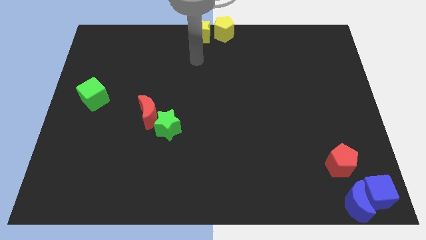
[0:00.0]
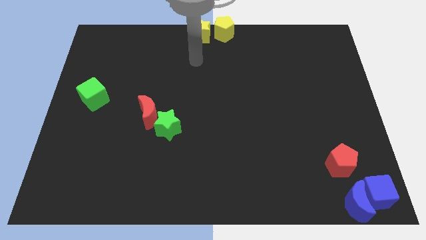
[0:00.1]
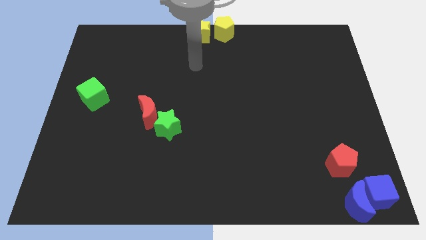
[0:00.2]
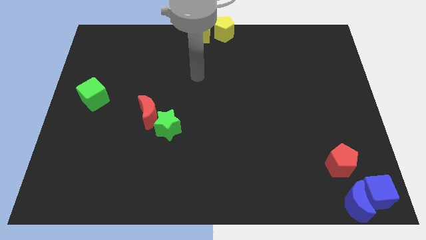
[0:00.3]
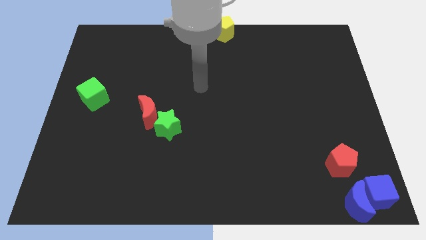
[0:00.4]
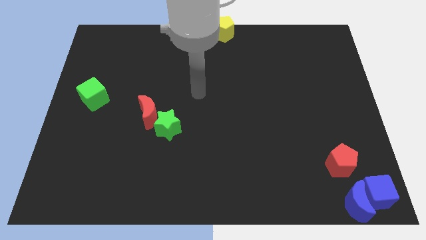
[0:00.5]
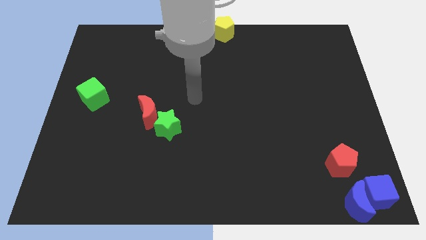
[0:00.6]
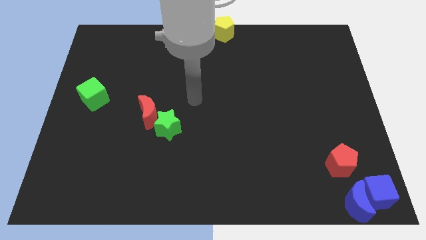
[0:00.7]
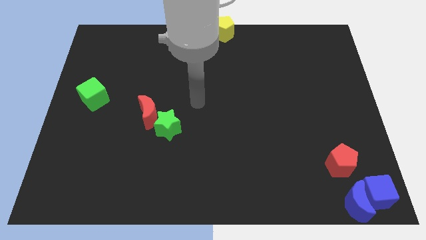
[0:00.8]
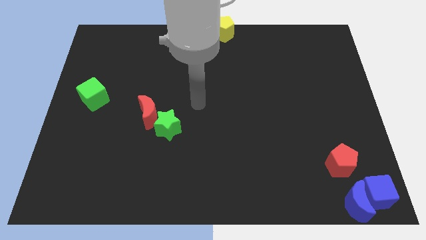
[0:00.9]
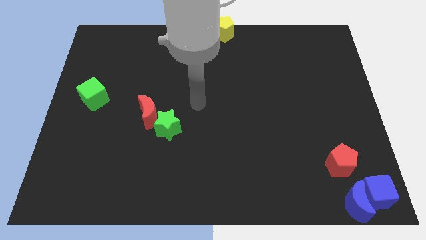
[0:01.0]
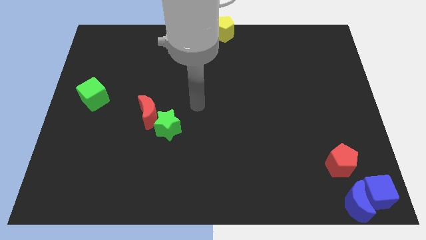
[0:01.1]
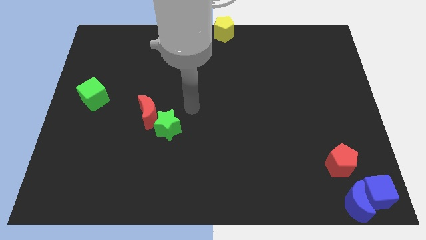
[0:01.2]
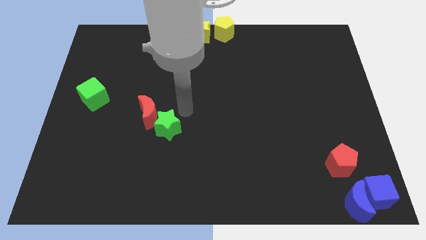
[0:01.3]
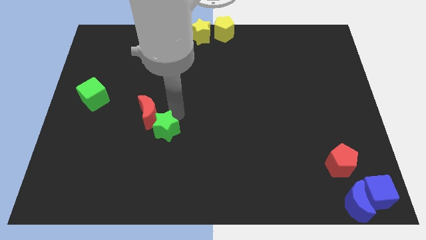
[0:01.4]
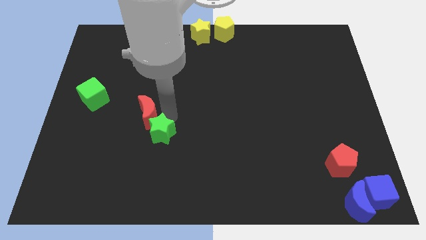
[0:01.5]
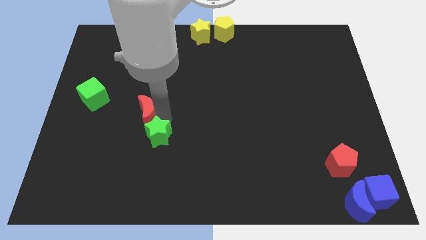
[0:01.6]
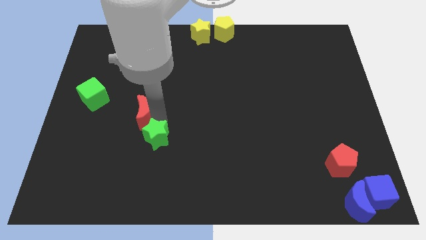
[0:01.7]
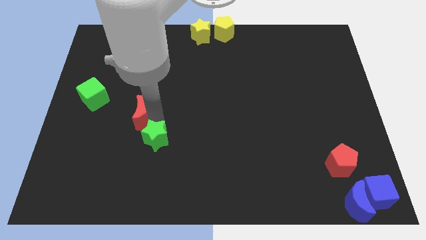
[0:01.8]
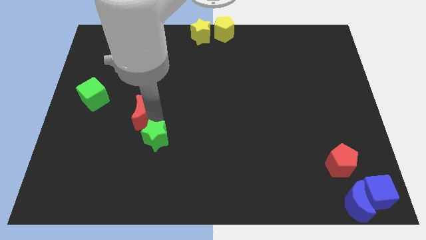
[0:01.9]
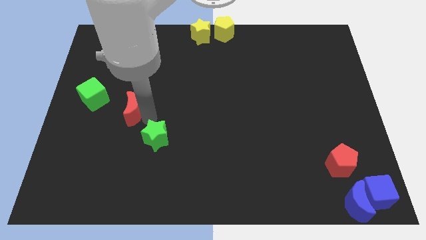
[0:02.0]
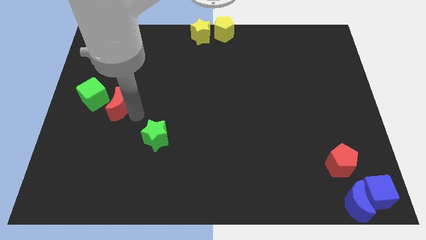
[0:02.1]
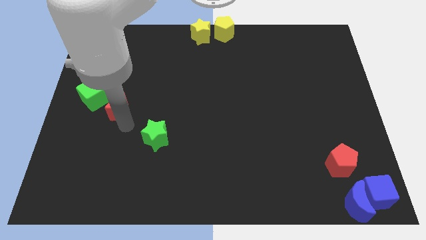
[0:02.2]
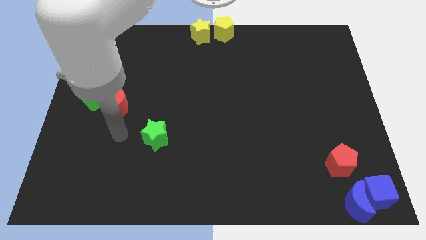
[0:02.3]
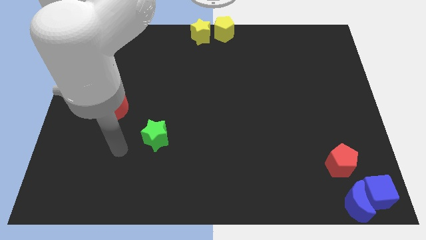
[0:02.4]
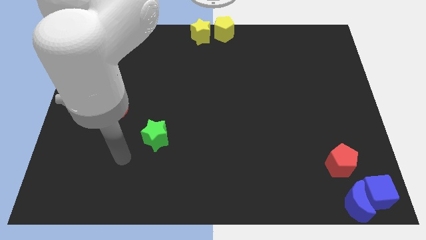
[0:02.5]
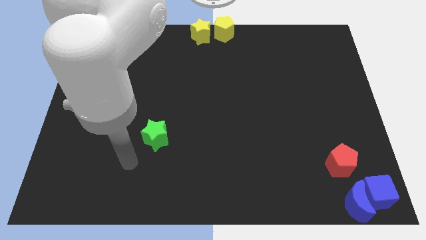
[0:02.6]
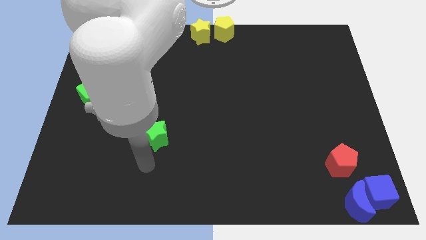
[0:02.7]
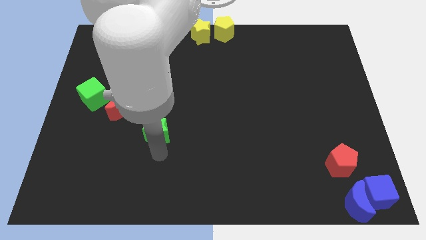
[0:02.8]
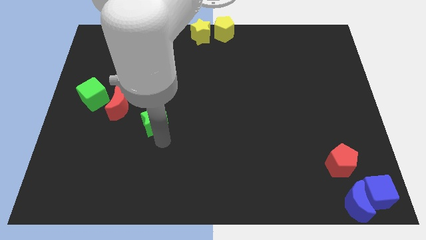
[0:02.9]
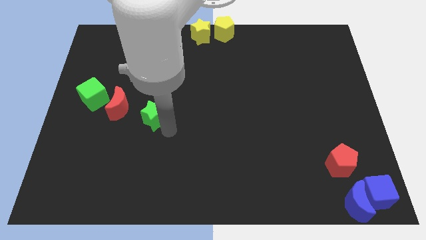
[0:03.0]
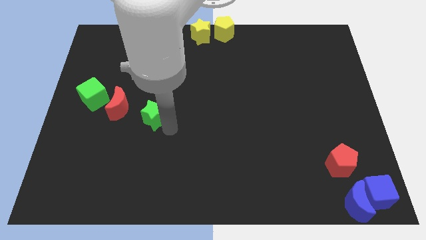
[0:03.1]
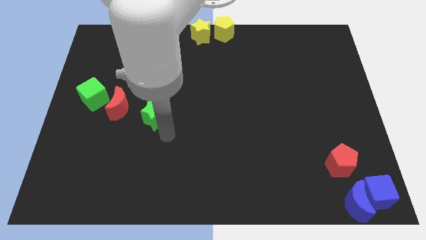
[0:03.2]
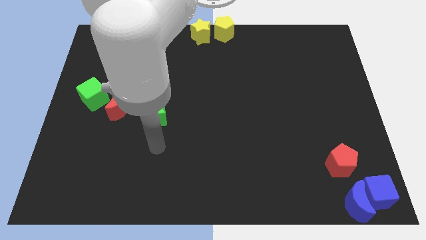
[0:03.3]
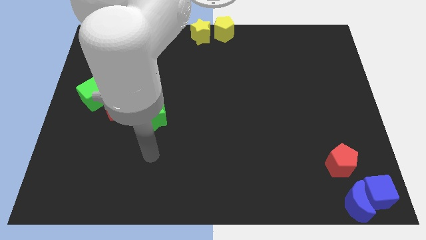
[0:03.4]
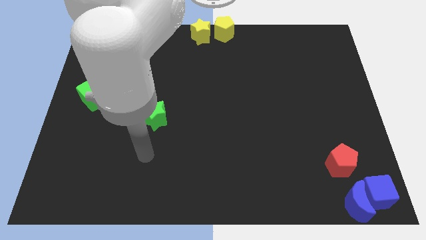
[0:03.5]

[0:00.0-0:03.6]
separate the green star and red moon

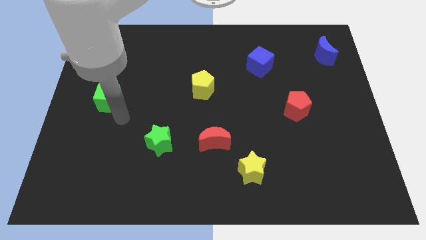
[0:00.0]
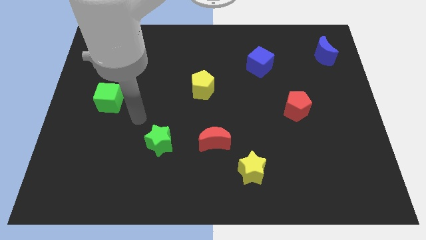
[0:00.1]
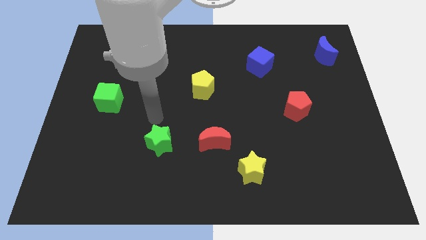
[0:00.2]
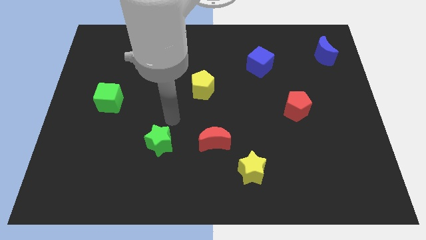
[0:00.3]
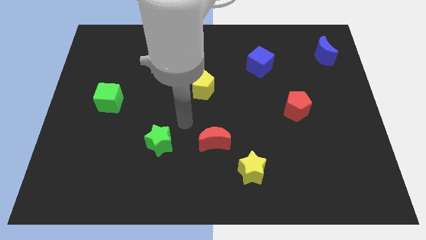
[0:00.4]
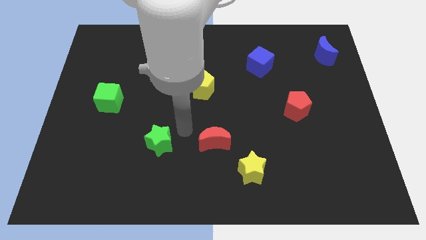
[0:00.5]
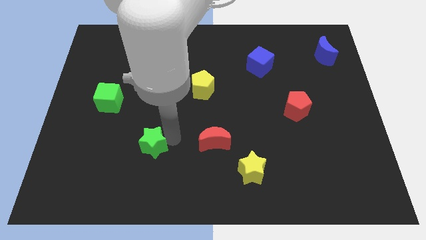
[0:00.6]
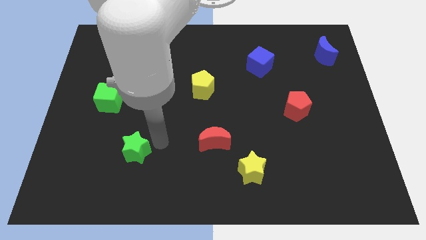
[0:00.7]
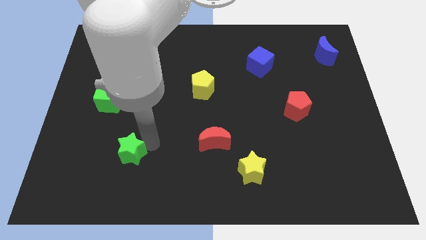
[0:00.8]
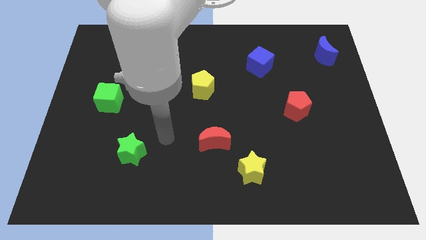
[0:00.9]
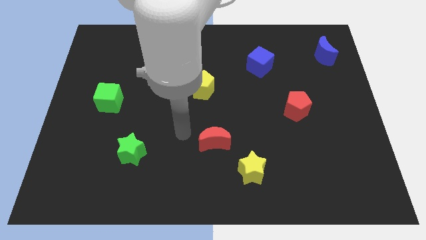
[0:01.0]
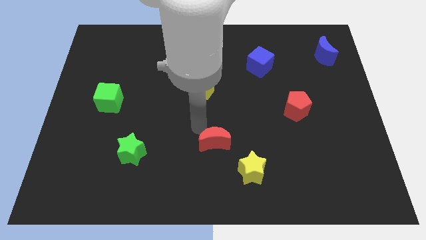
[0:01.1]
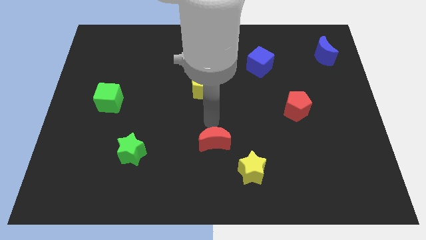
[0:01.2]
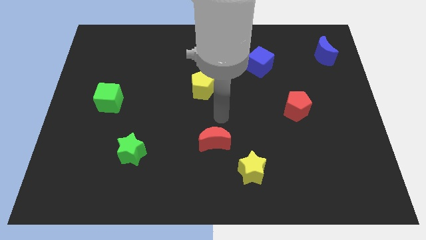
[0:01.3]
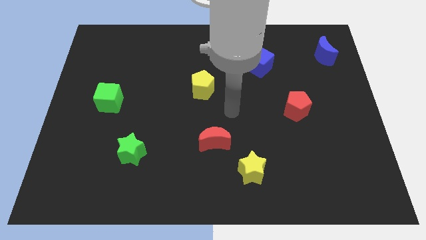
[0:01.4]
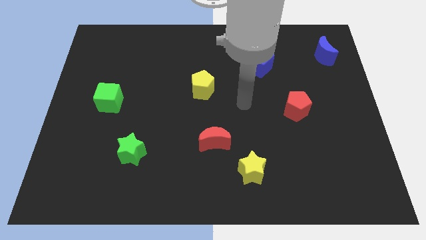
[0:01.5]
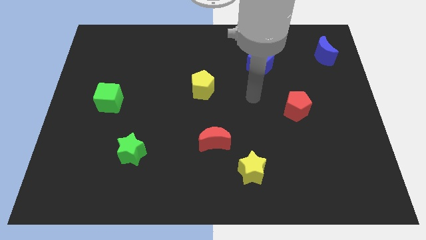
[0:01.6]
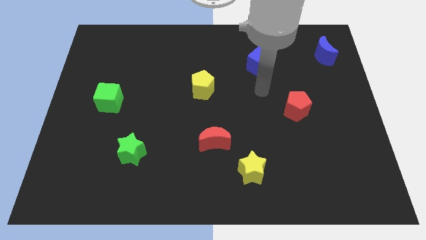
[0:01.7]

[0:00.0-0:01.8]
move the green star to the diagonally bottom left

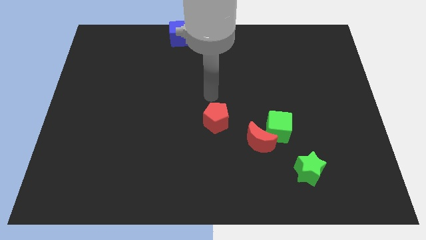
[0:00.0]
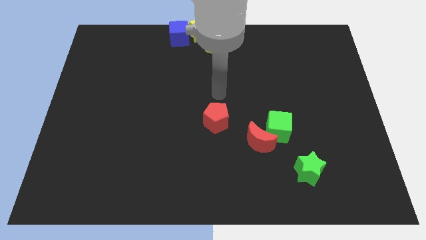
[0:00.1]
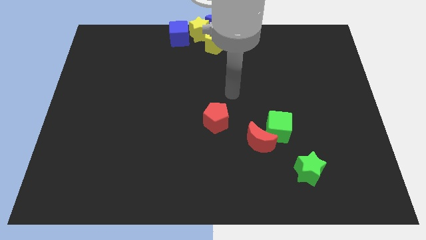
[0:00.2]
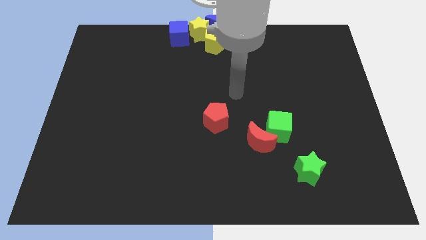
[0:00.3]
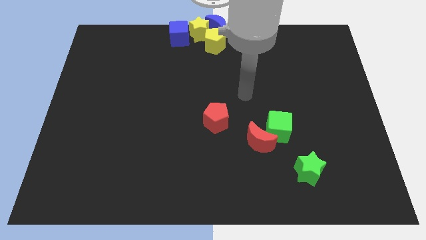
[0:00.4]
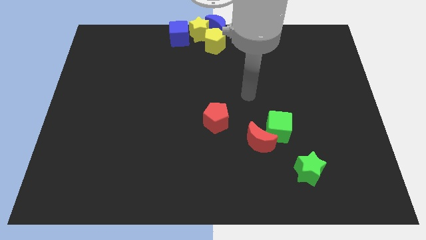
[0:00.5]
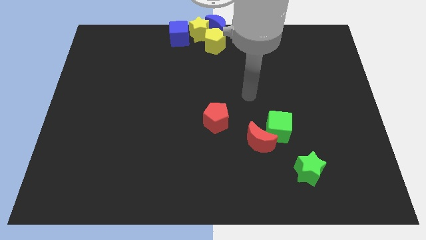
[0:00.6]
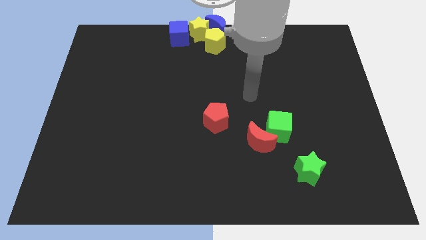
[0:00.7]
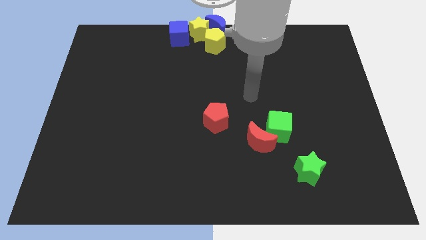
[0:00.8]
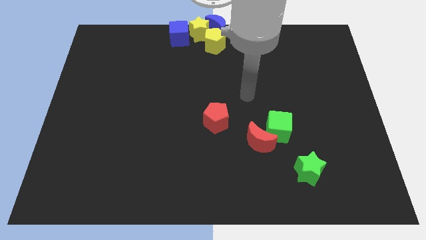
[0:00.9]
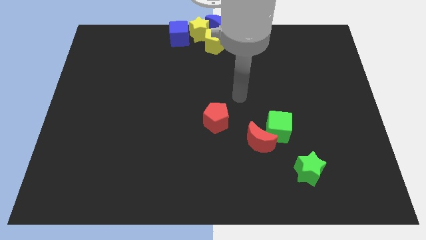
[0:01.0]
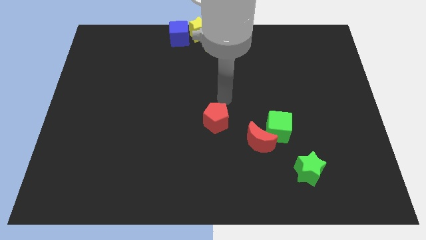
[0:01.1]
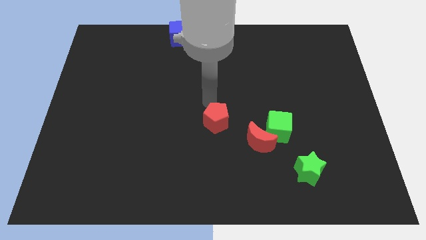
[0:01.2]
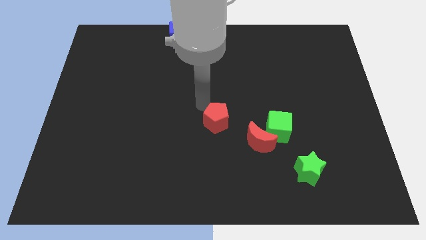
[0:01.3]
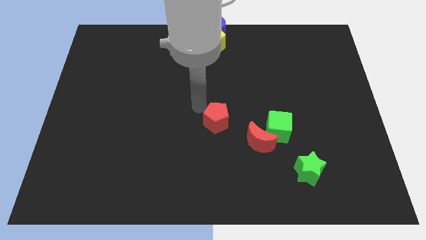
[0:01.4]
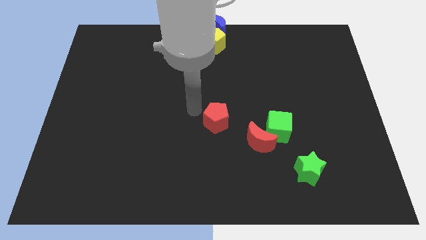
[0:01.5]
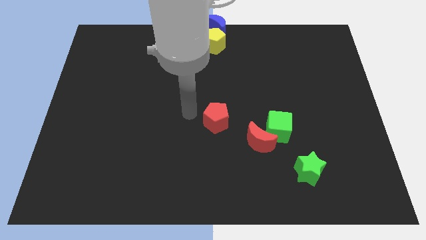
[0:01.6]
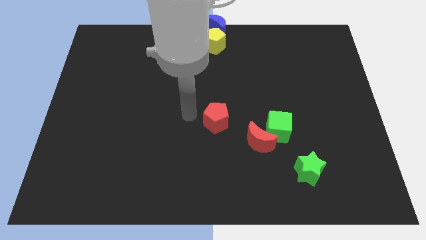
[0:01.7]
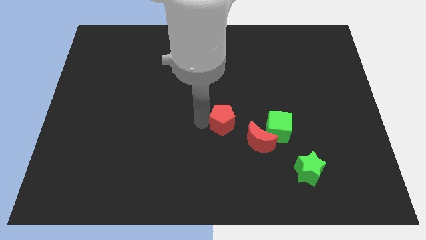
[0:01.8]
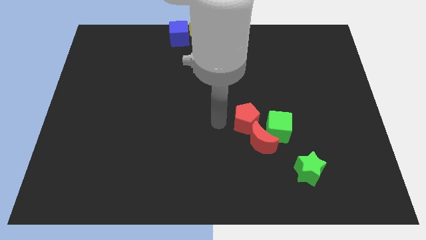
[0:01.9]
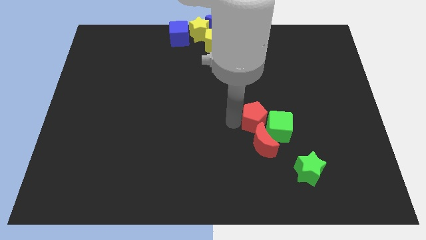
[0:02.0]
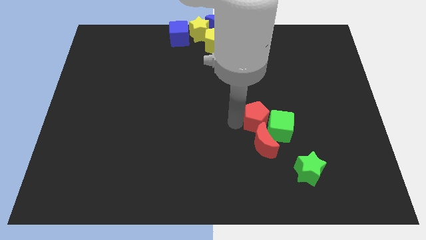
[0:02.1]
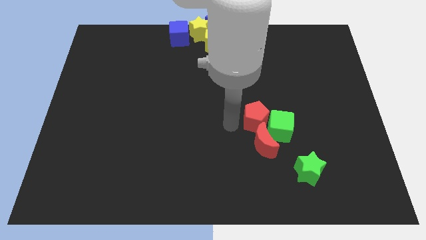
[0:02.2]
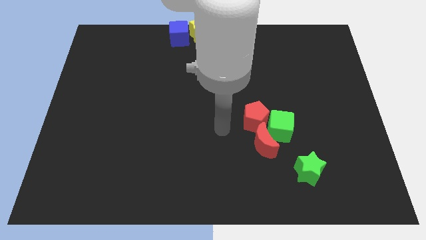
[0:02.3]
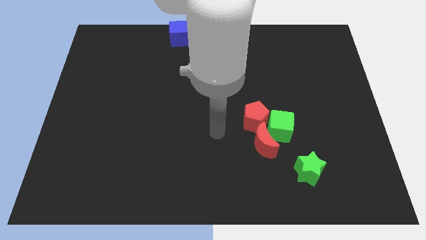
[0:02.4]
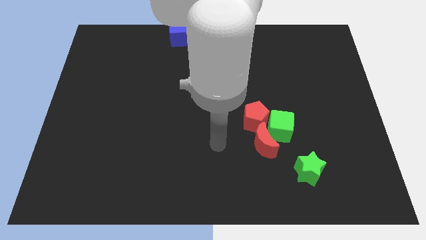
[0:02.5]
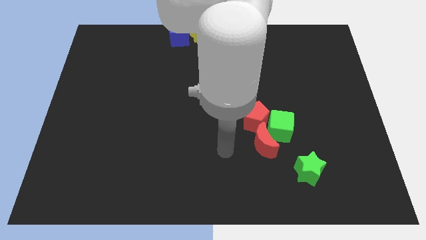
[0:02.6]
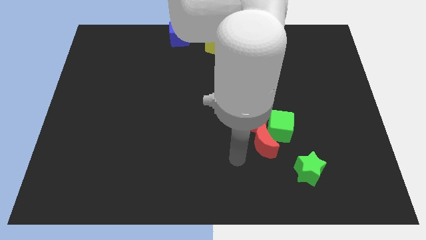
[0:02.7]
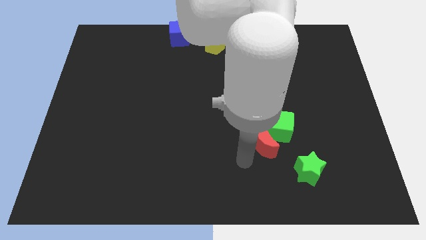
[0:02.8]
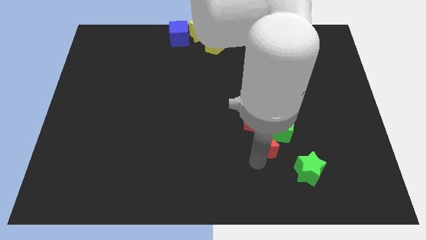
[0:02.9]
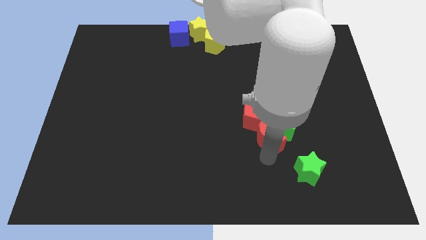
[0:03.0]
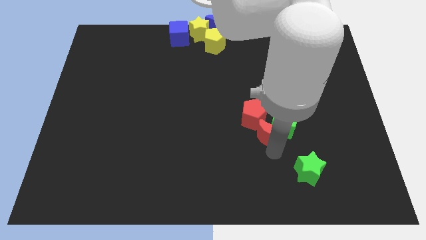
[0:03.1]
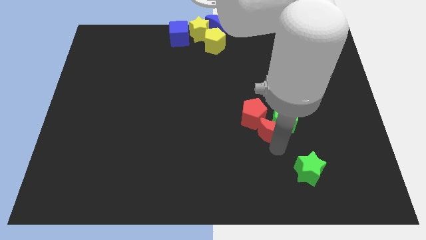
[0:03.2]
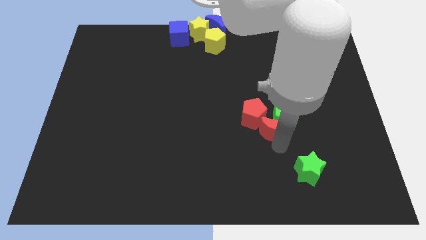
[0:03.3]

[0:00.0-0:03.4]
push the red pentagon into the green cube and red moon

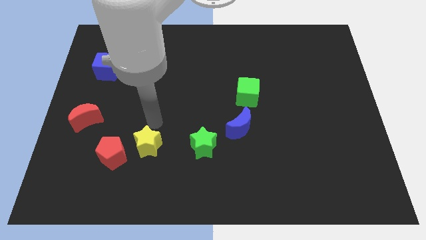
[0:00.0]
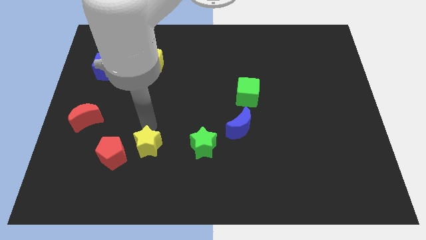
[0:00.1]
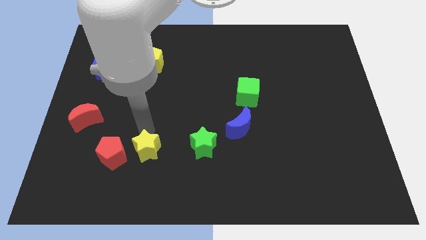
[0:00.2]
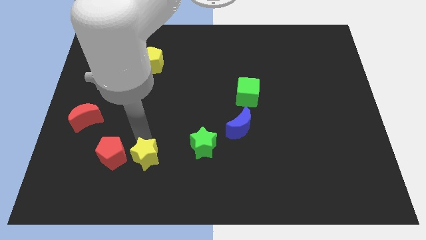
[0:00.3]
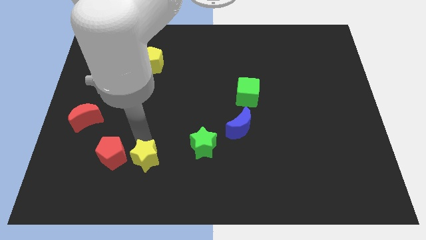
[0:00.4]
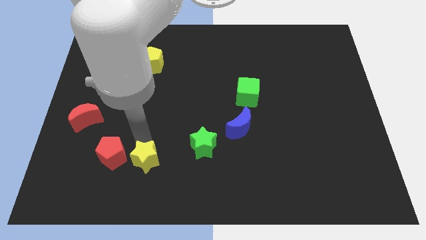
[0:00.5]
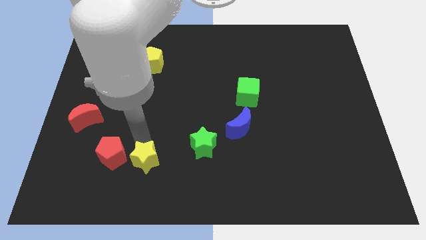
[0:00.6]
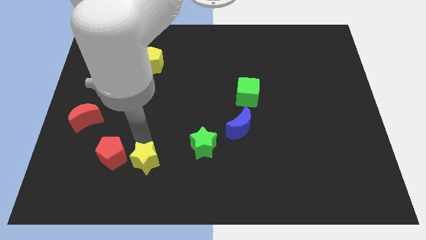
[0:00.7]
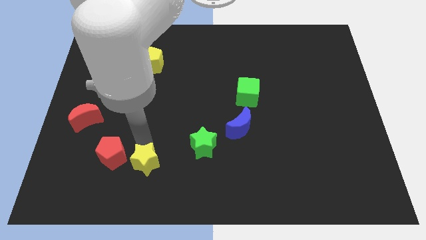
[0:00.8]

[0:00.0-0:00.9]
push the yellow star to the right of the red pentagon
